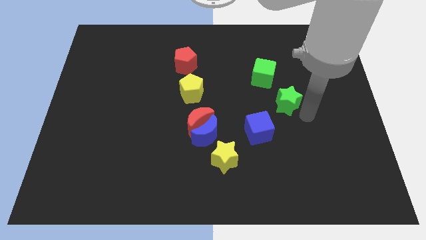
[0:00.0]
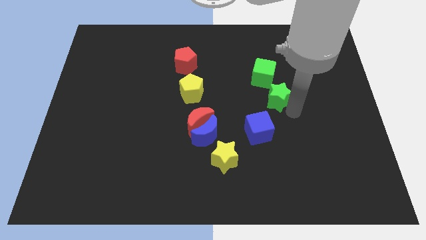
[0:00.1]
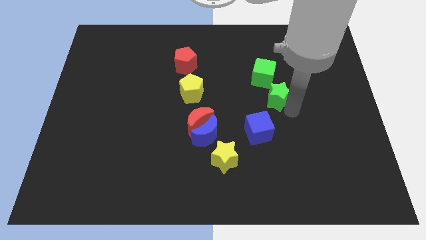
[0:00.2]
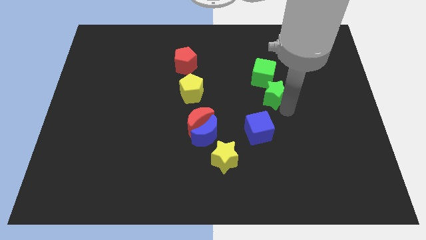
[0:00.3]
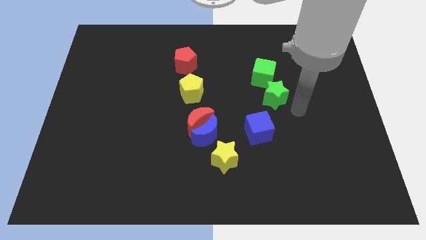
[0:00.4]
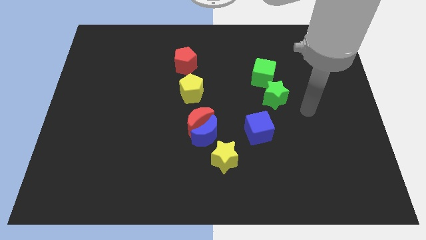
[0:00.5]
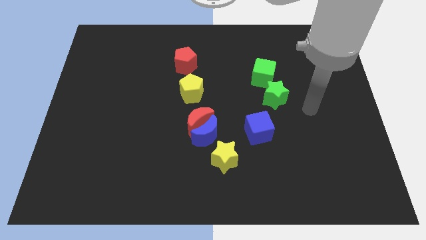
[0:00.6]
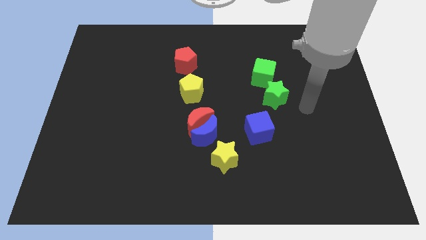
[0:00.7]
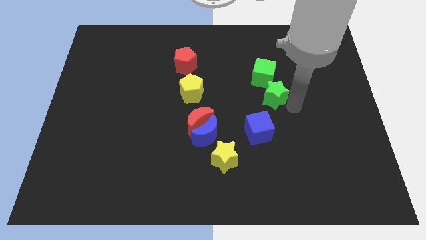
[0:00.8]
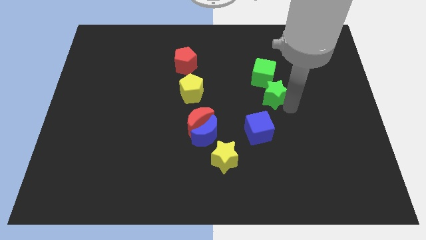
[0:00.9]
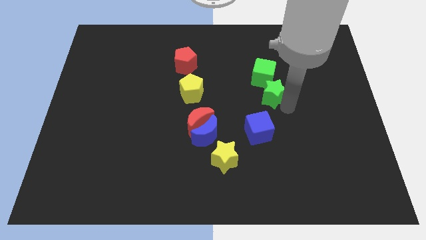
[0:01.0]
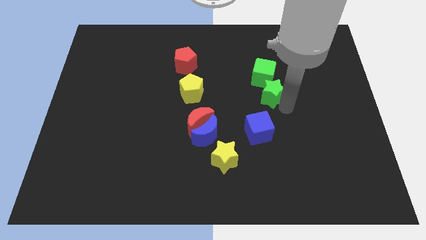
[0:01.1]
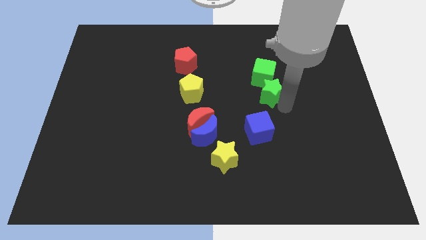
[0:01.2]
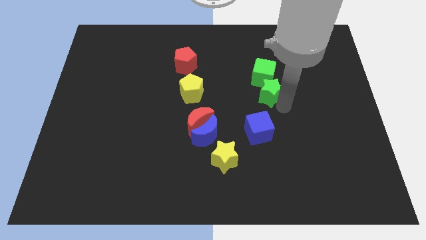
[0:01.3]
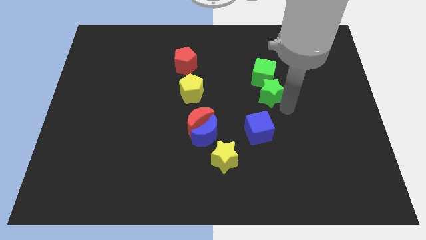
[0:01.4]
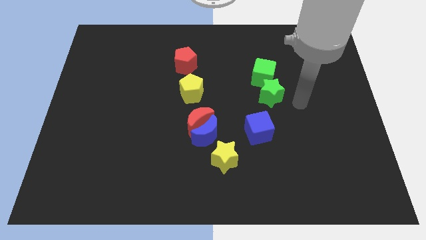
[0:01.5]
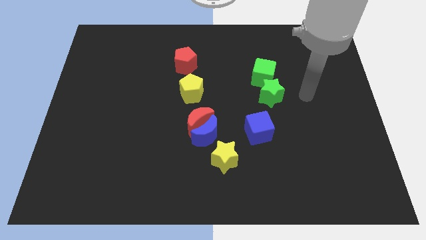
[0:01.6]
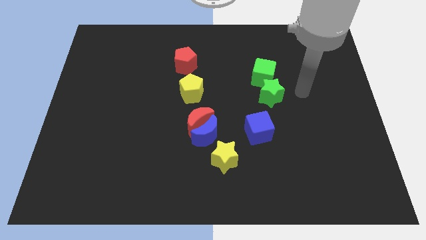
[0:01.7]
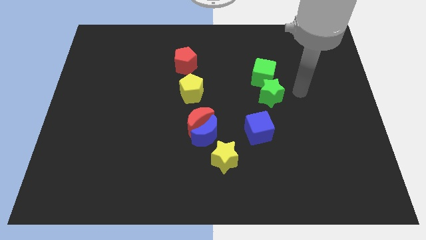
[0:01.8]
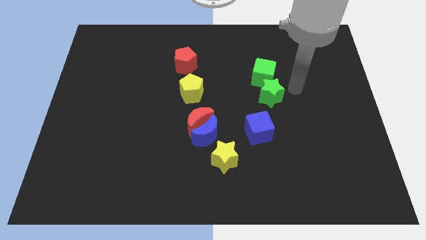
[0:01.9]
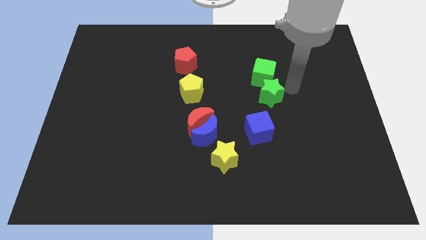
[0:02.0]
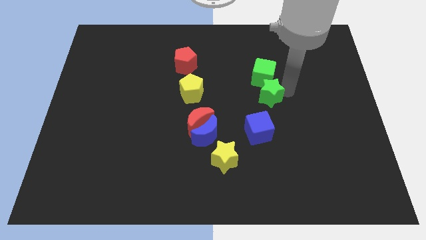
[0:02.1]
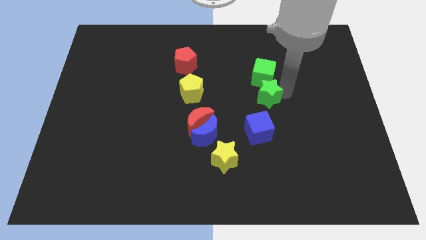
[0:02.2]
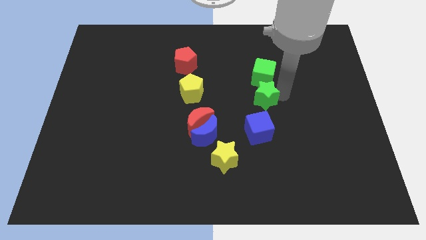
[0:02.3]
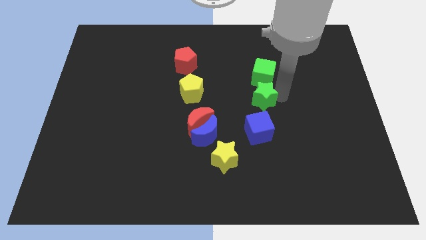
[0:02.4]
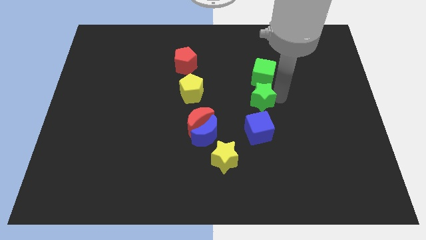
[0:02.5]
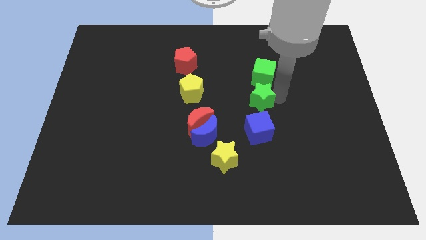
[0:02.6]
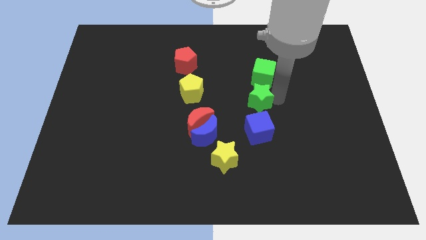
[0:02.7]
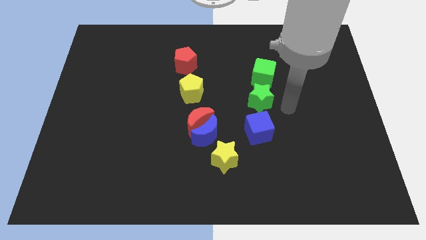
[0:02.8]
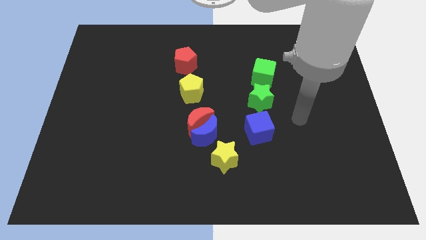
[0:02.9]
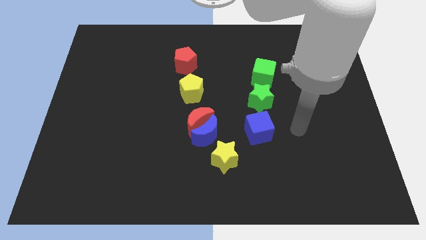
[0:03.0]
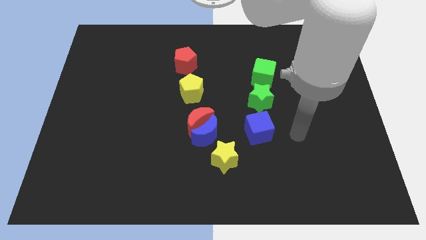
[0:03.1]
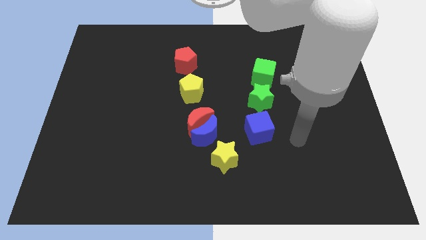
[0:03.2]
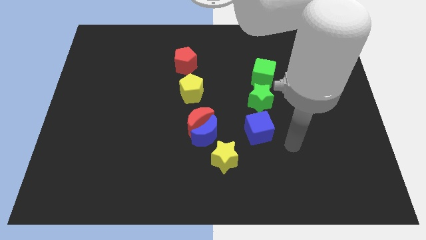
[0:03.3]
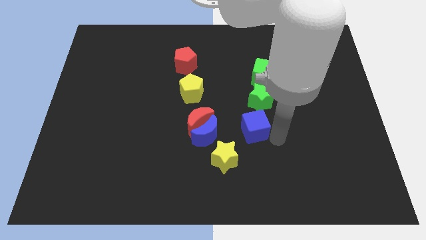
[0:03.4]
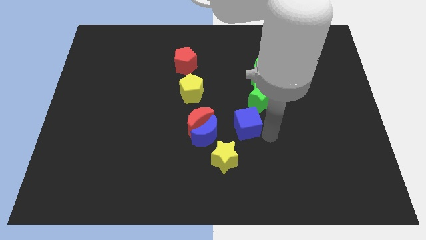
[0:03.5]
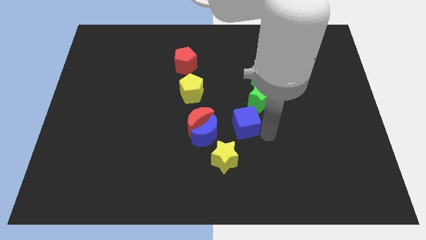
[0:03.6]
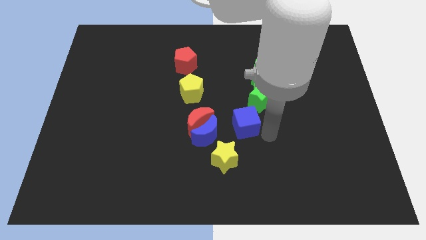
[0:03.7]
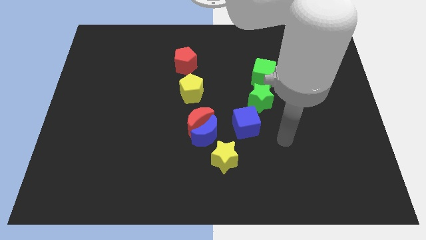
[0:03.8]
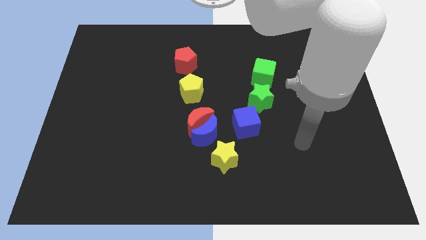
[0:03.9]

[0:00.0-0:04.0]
push the green star and blue cube slightly to left

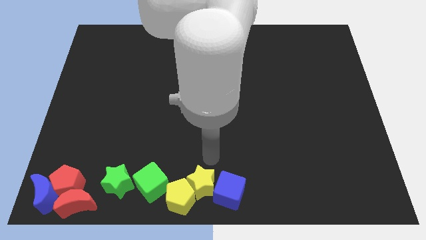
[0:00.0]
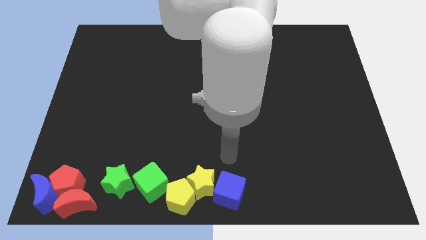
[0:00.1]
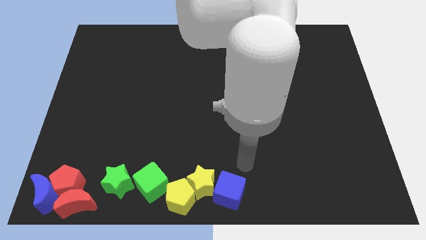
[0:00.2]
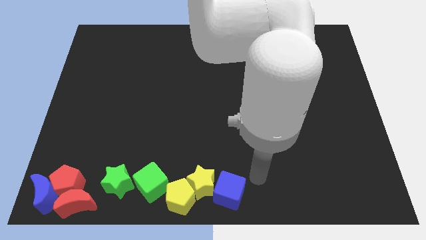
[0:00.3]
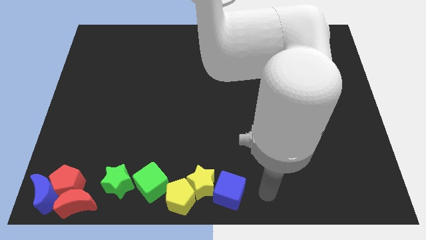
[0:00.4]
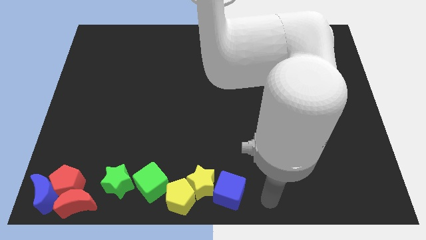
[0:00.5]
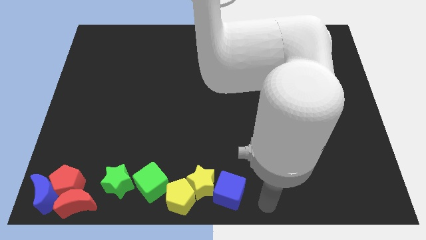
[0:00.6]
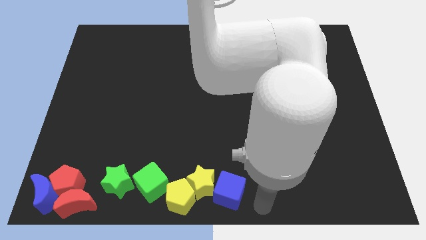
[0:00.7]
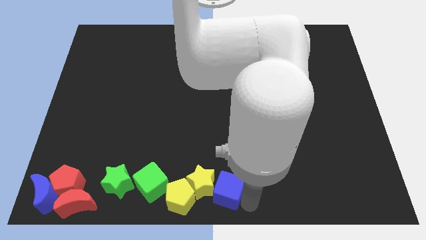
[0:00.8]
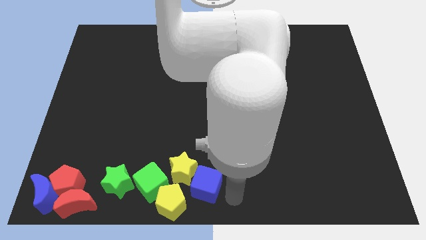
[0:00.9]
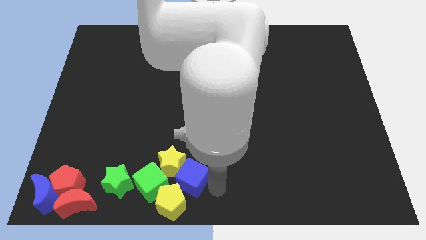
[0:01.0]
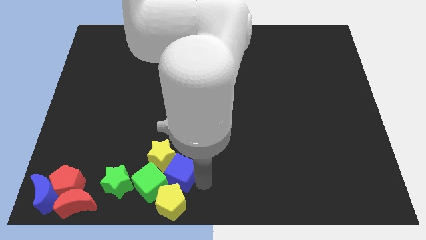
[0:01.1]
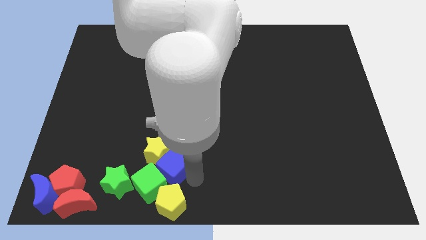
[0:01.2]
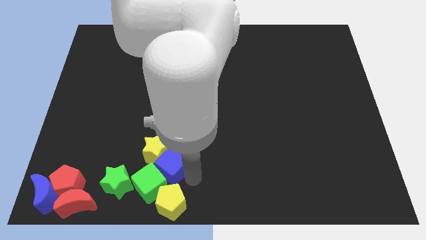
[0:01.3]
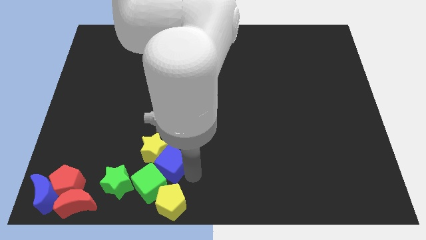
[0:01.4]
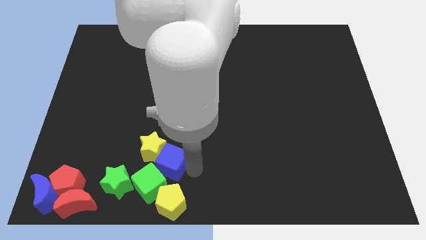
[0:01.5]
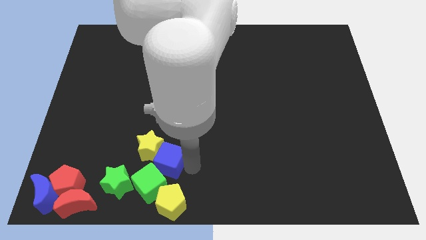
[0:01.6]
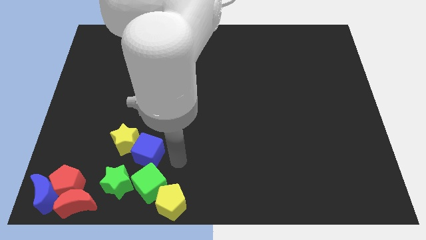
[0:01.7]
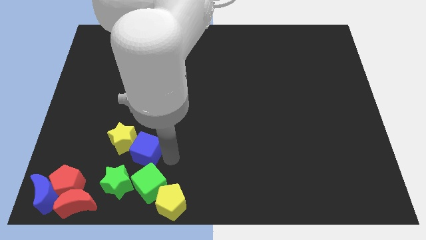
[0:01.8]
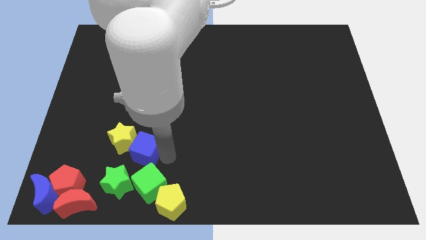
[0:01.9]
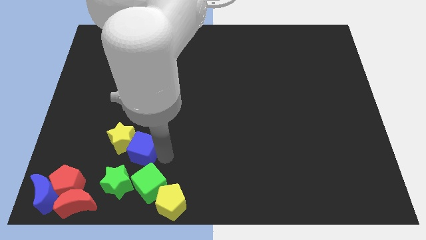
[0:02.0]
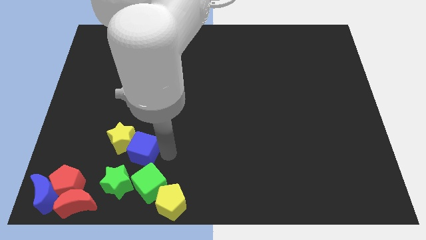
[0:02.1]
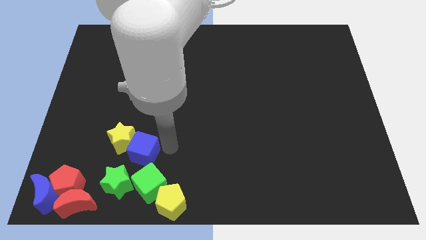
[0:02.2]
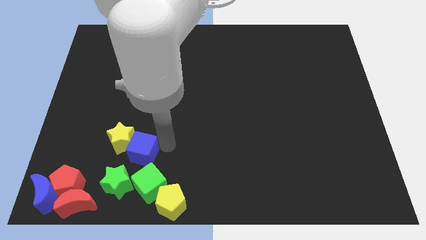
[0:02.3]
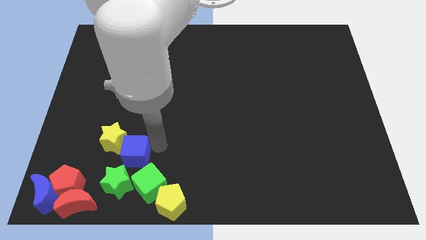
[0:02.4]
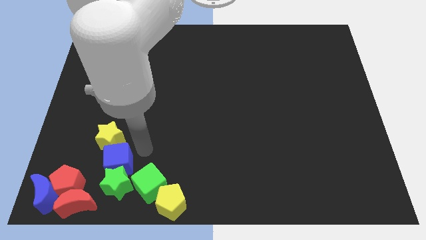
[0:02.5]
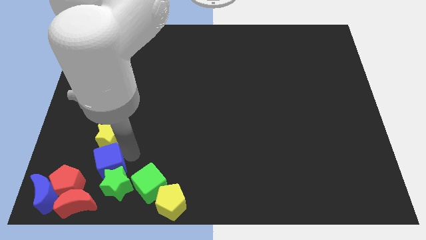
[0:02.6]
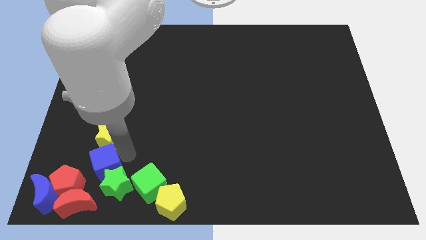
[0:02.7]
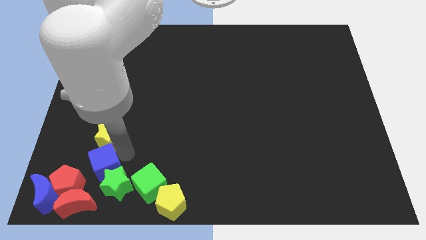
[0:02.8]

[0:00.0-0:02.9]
push the blue cube in between yellow star and green star

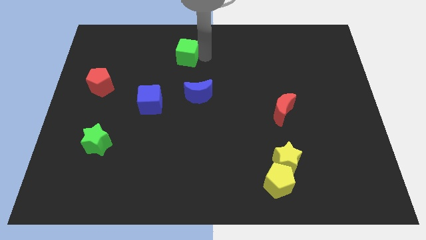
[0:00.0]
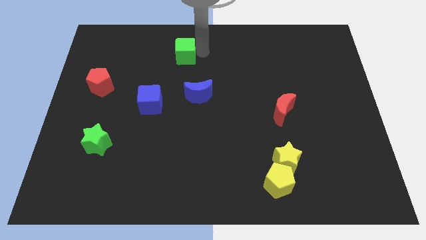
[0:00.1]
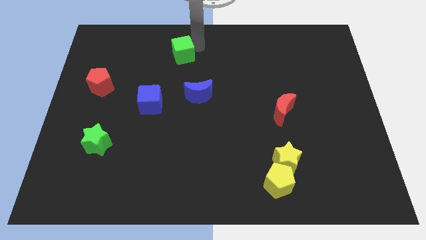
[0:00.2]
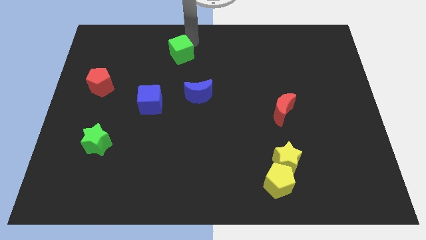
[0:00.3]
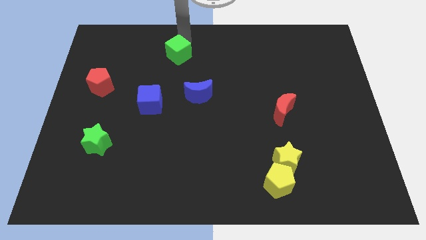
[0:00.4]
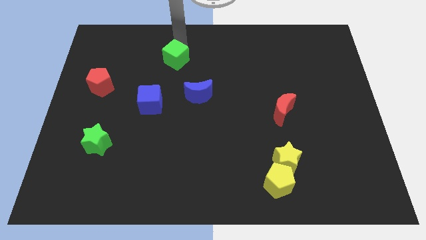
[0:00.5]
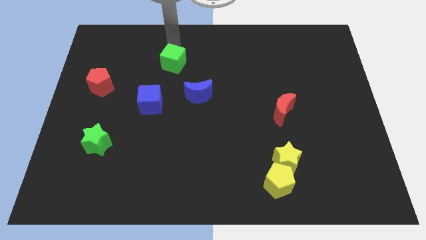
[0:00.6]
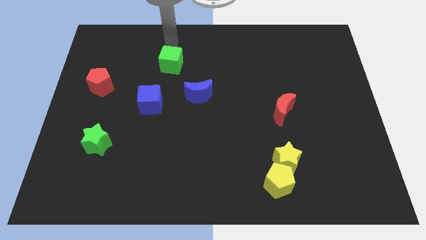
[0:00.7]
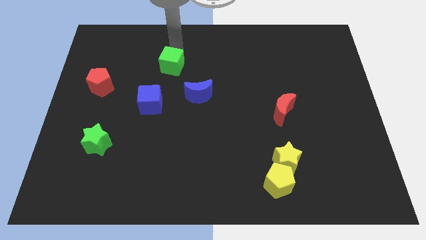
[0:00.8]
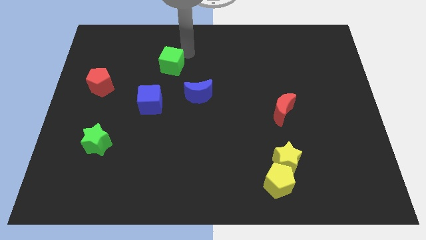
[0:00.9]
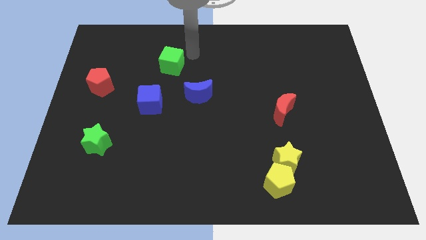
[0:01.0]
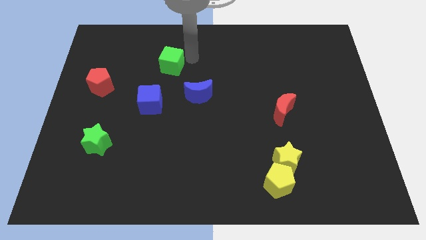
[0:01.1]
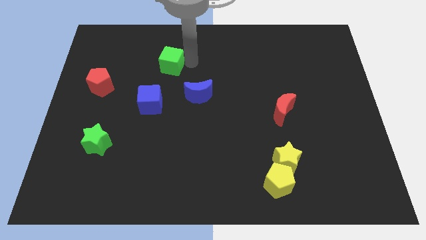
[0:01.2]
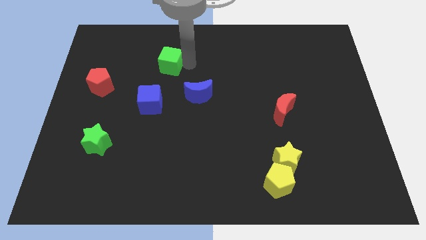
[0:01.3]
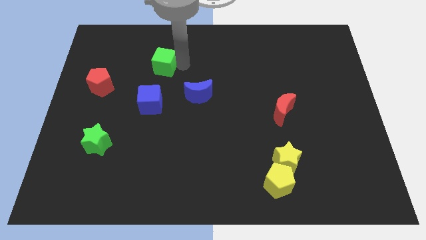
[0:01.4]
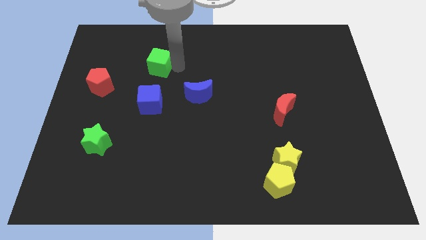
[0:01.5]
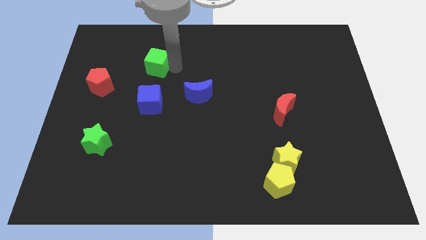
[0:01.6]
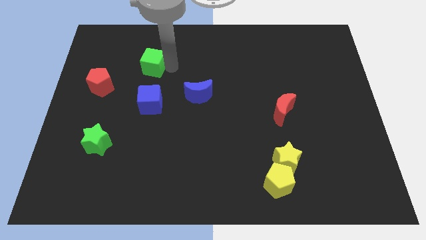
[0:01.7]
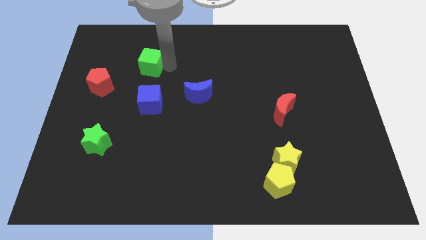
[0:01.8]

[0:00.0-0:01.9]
place the green cube above the blue cube

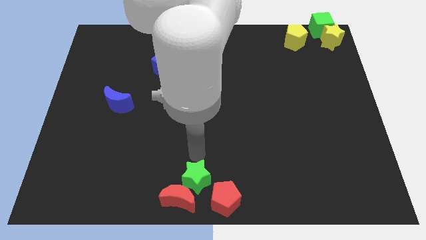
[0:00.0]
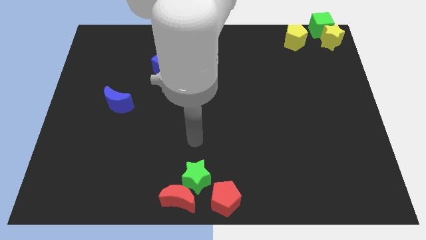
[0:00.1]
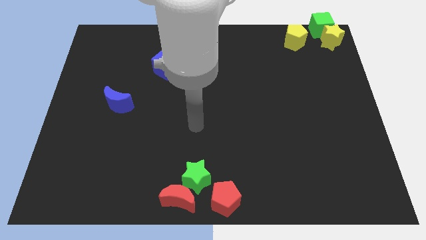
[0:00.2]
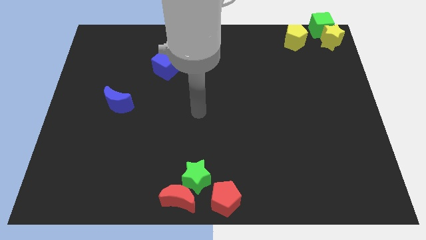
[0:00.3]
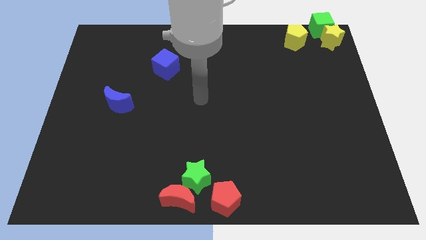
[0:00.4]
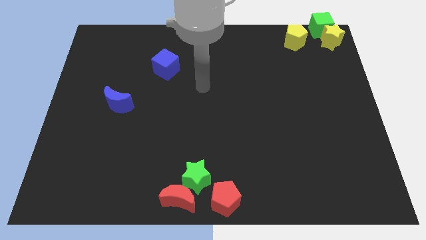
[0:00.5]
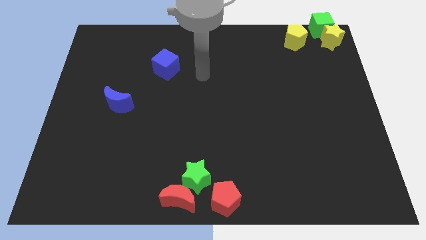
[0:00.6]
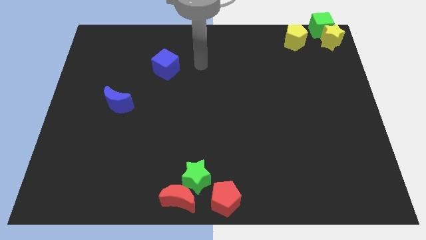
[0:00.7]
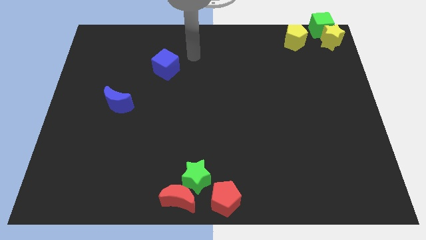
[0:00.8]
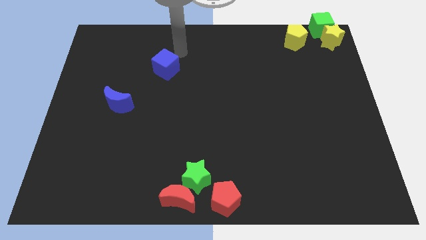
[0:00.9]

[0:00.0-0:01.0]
place green star on top of red crescent
